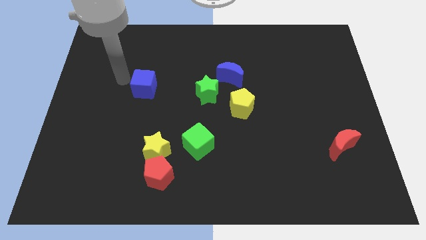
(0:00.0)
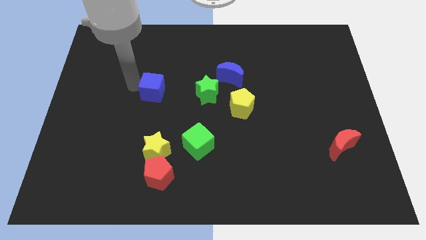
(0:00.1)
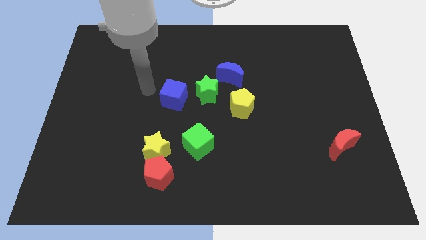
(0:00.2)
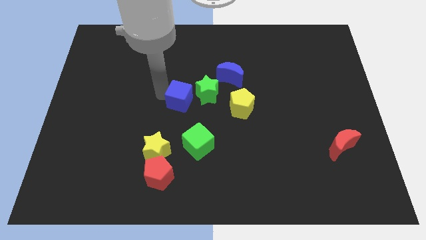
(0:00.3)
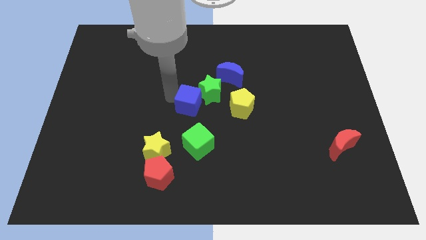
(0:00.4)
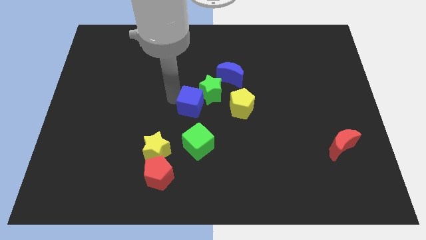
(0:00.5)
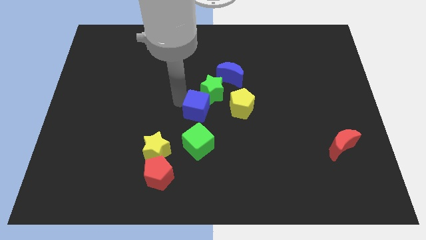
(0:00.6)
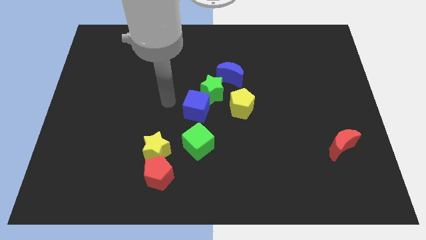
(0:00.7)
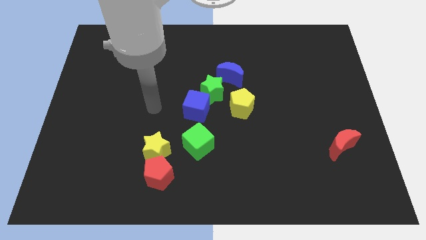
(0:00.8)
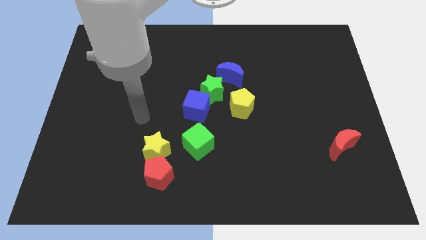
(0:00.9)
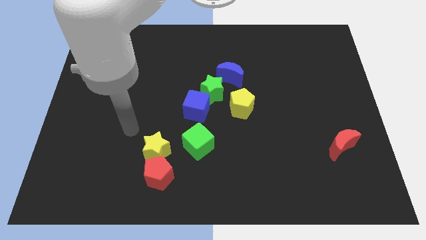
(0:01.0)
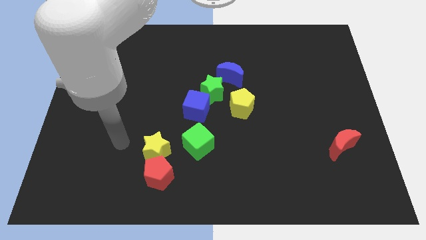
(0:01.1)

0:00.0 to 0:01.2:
drag the blue cube next to the green star

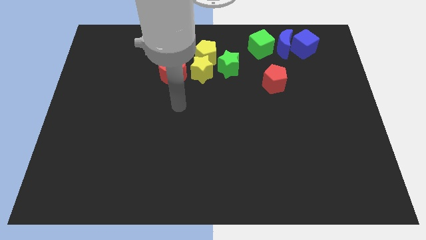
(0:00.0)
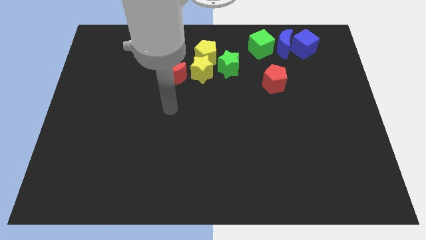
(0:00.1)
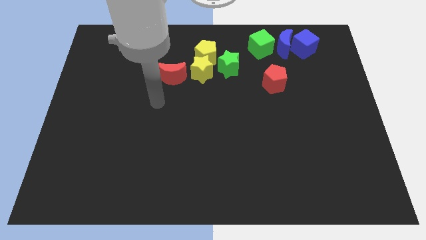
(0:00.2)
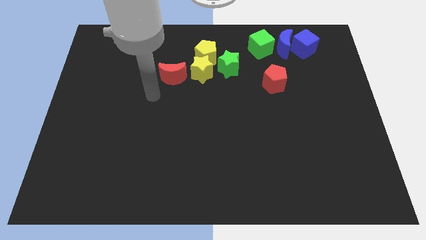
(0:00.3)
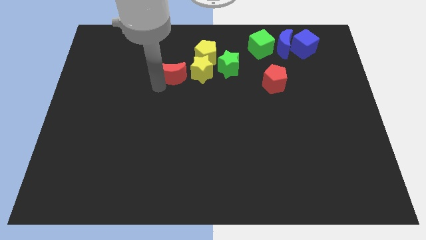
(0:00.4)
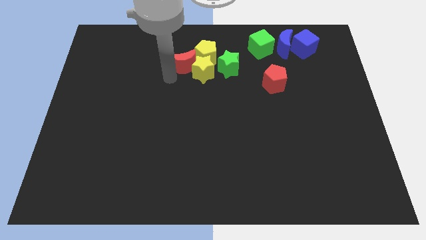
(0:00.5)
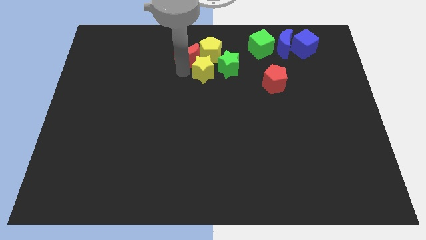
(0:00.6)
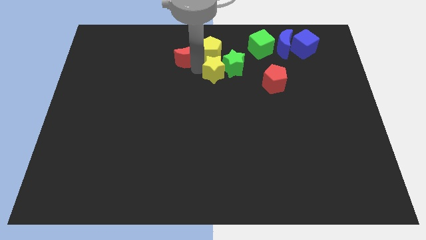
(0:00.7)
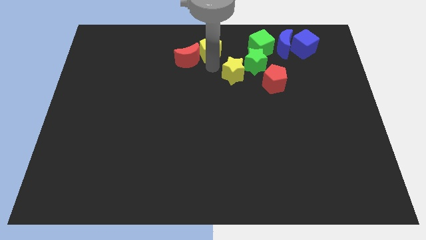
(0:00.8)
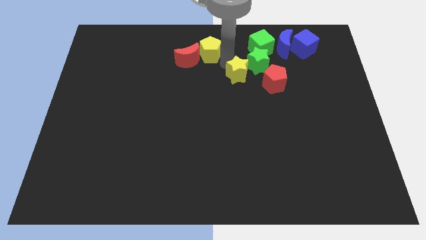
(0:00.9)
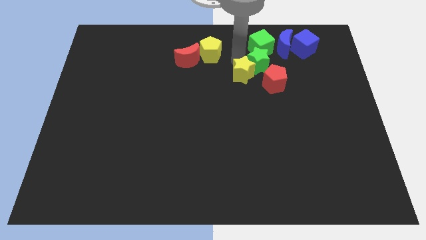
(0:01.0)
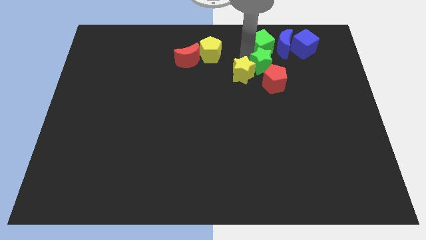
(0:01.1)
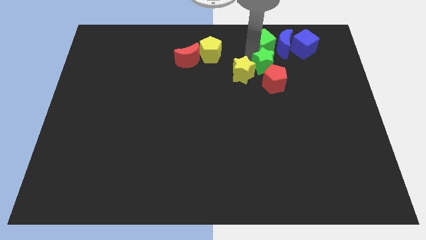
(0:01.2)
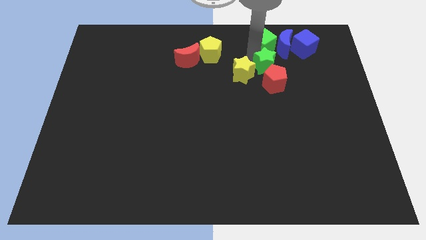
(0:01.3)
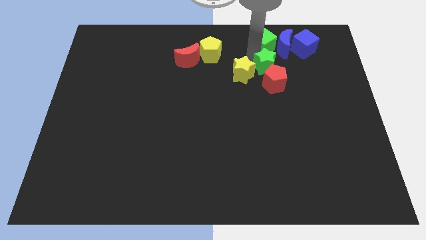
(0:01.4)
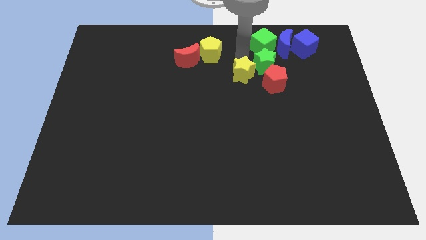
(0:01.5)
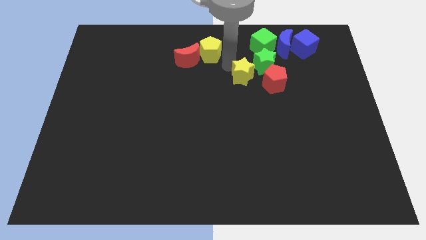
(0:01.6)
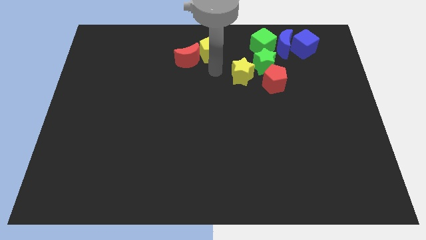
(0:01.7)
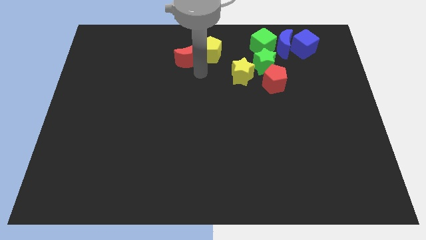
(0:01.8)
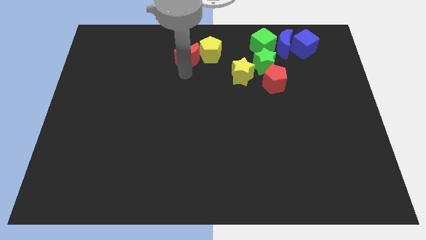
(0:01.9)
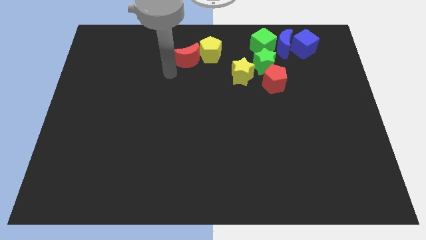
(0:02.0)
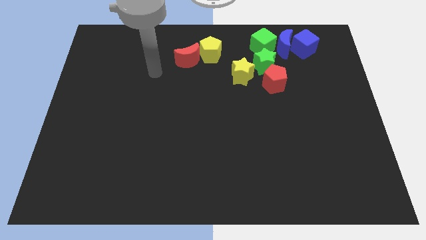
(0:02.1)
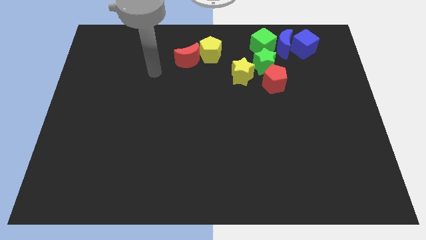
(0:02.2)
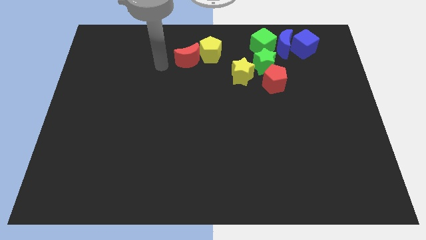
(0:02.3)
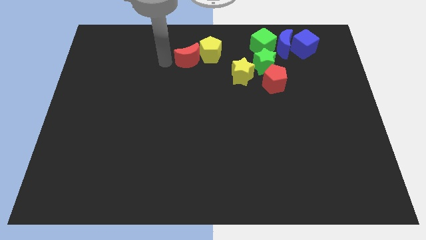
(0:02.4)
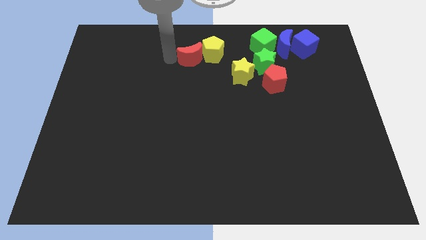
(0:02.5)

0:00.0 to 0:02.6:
push the green and yellow stars into the red pentagon

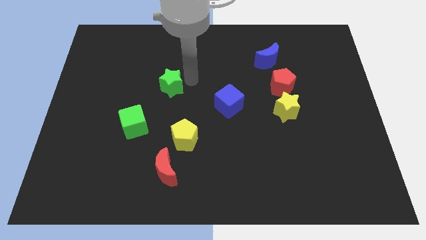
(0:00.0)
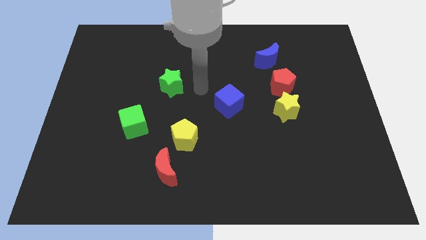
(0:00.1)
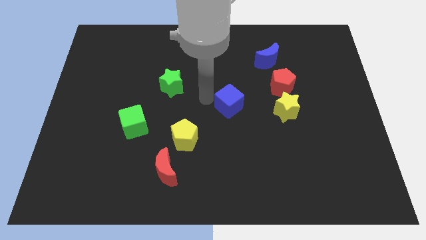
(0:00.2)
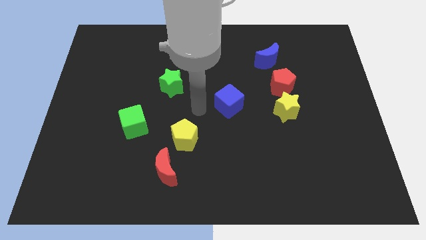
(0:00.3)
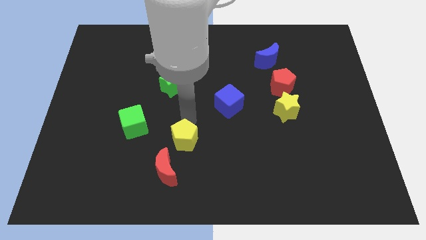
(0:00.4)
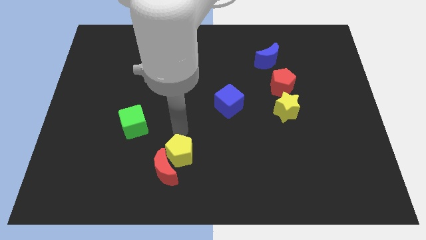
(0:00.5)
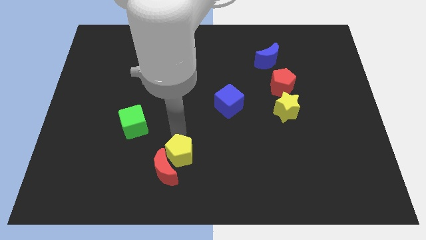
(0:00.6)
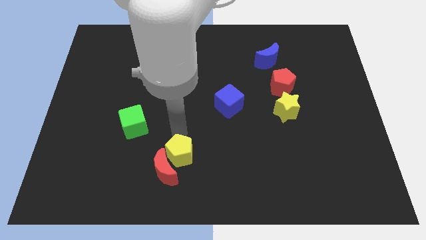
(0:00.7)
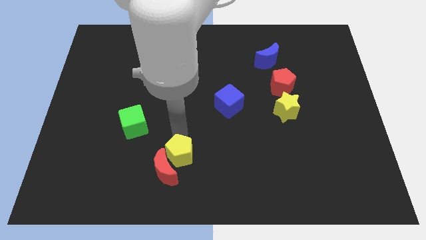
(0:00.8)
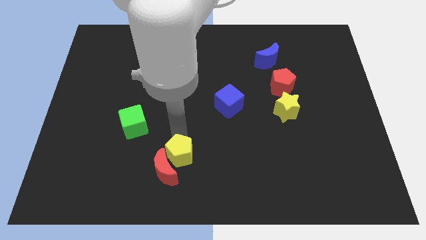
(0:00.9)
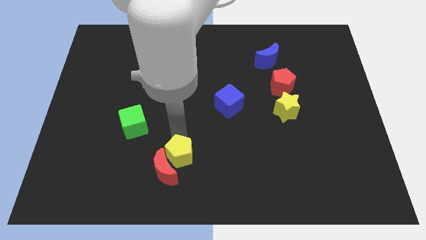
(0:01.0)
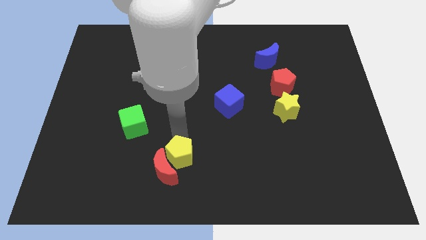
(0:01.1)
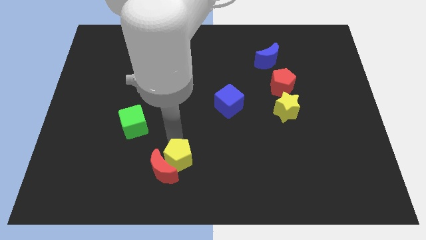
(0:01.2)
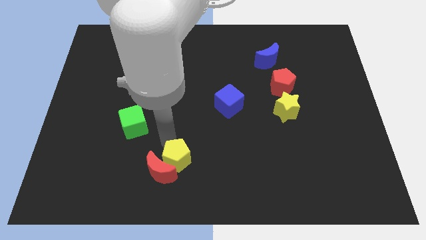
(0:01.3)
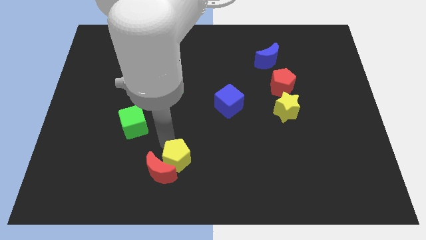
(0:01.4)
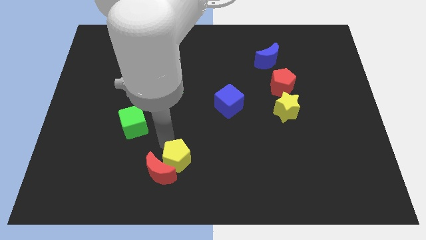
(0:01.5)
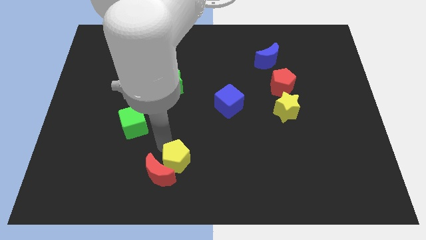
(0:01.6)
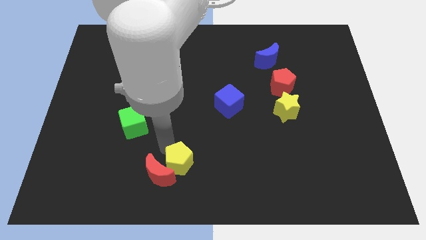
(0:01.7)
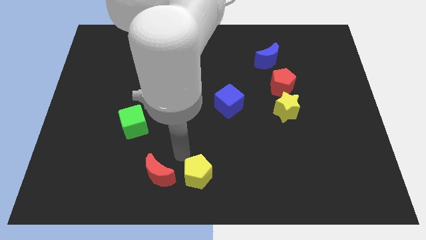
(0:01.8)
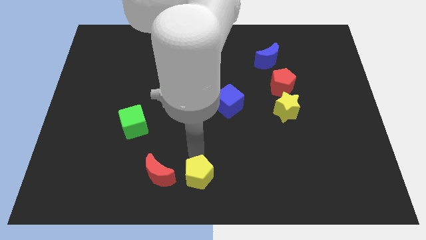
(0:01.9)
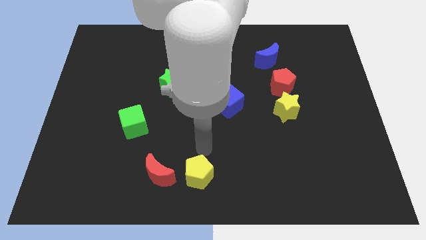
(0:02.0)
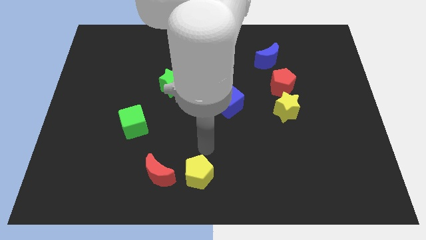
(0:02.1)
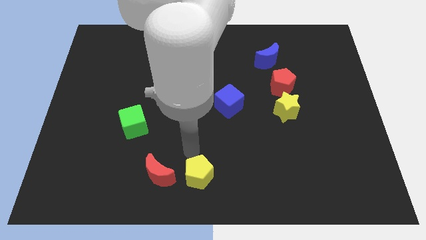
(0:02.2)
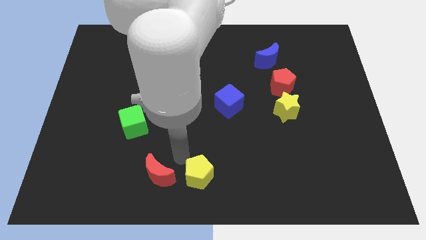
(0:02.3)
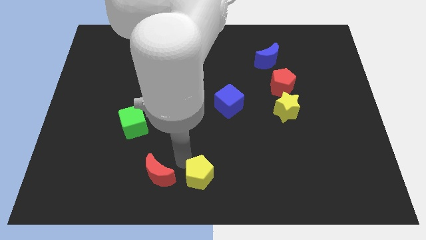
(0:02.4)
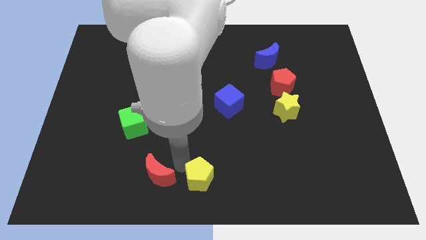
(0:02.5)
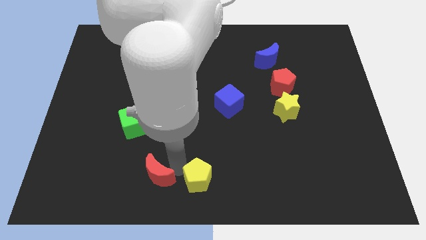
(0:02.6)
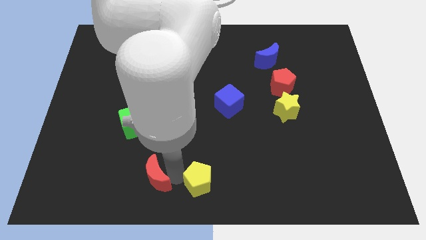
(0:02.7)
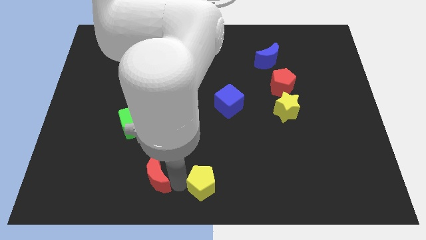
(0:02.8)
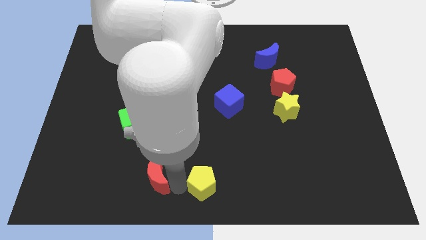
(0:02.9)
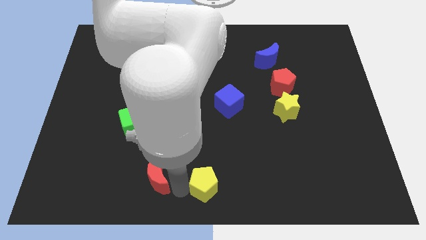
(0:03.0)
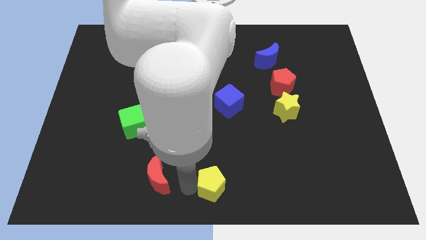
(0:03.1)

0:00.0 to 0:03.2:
move the yellow pentagon to the bottom center of the board

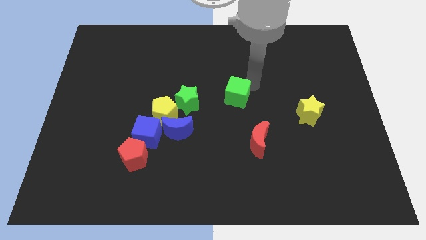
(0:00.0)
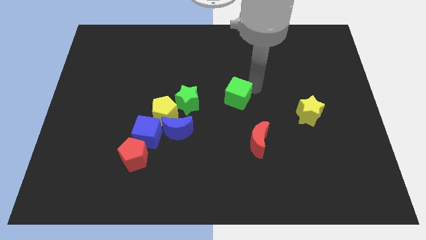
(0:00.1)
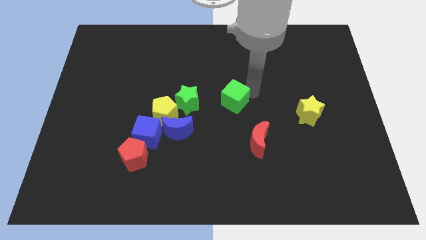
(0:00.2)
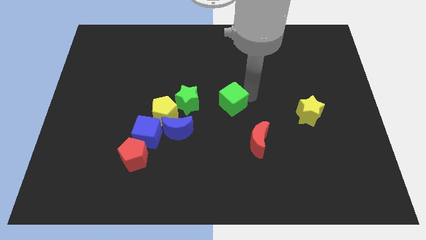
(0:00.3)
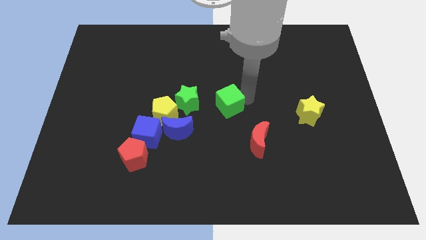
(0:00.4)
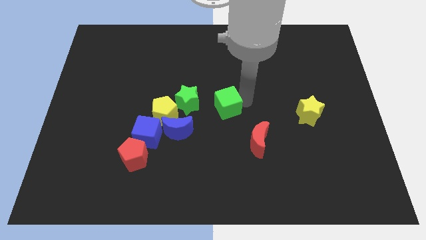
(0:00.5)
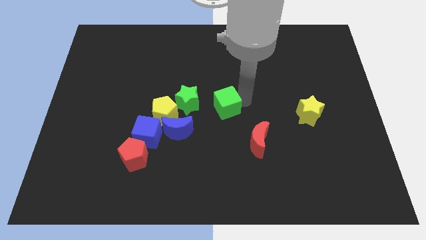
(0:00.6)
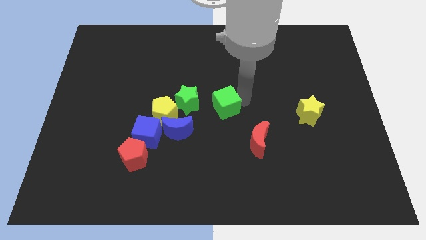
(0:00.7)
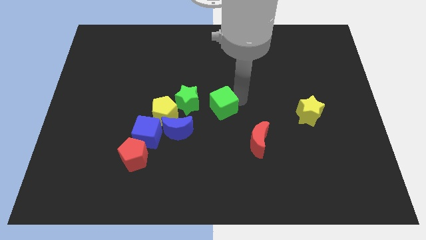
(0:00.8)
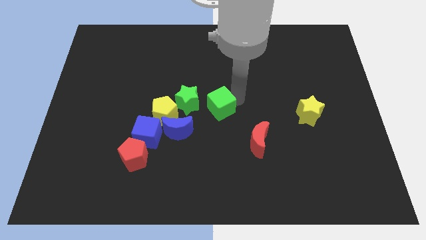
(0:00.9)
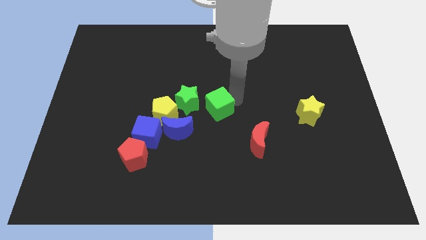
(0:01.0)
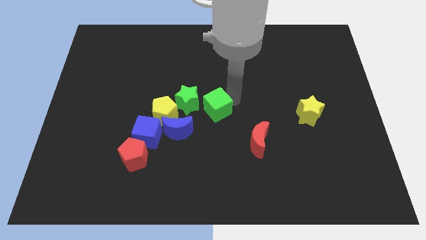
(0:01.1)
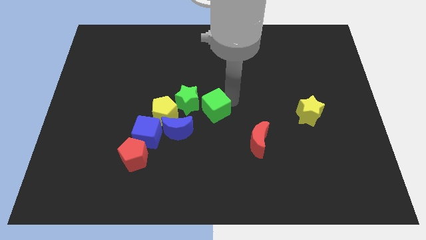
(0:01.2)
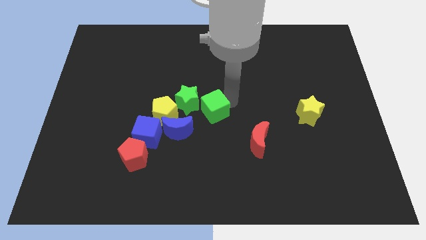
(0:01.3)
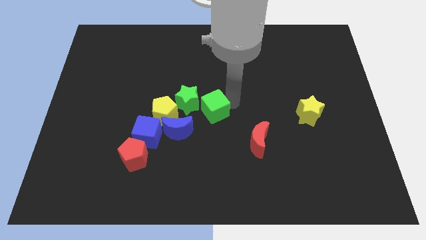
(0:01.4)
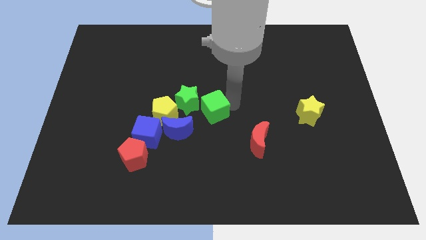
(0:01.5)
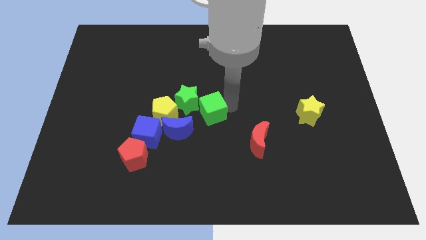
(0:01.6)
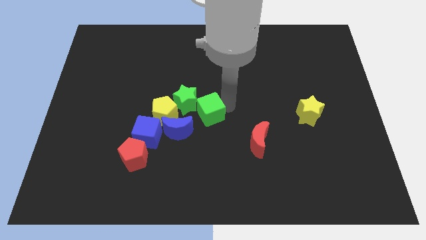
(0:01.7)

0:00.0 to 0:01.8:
drag the green cube diagonally bottom right to the green star

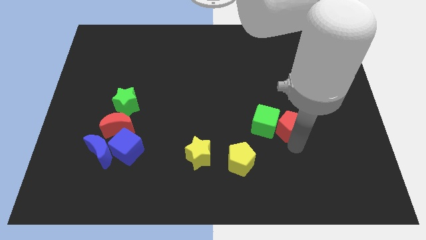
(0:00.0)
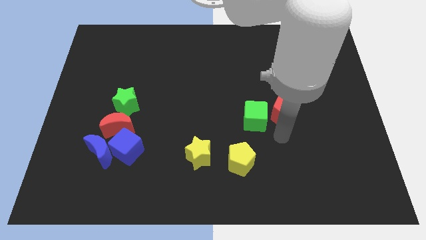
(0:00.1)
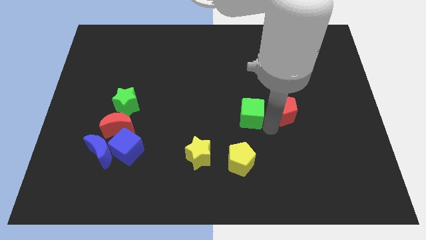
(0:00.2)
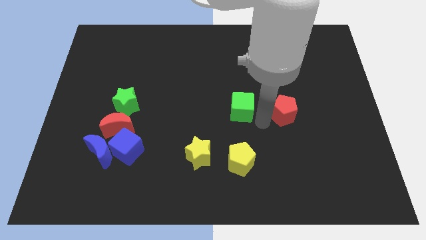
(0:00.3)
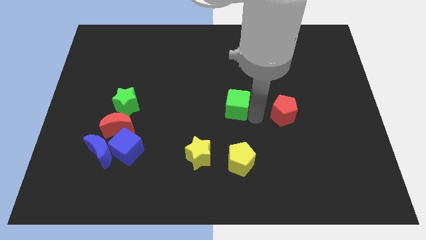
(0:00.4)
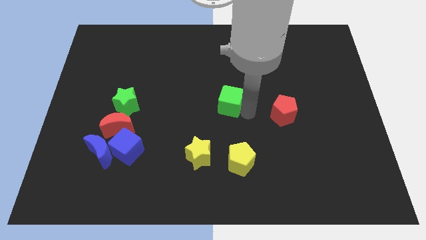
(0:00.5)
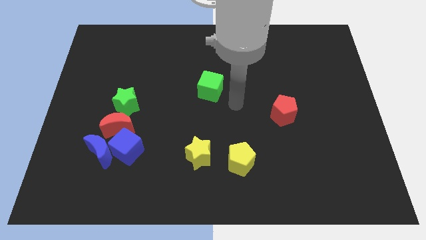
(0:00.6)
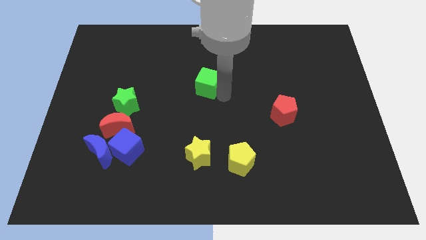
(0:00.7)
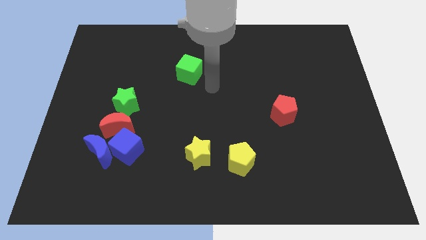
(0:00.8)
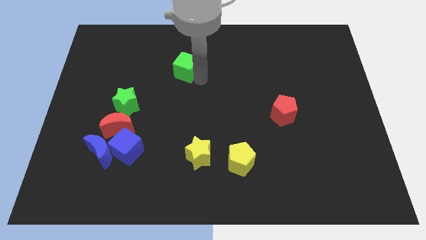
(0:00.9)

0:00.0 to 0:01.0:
separate the red pentagon and the green cube
